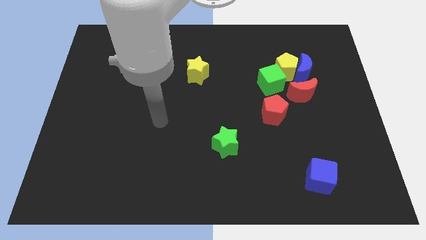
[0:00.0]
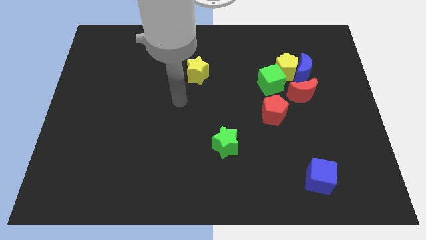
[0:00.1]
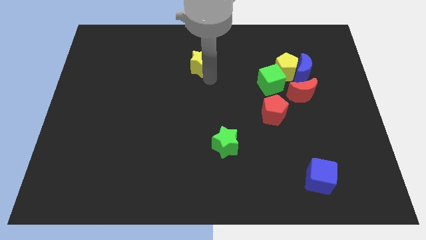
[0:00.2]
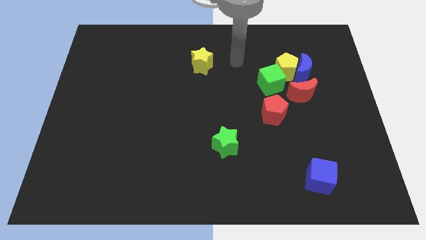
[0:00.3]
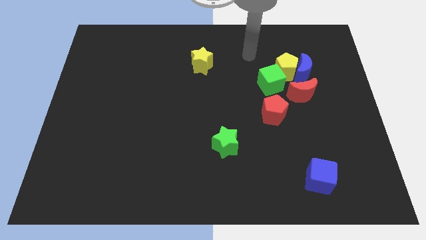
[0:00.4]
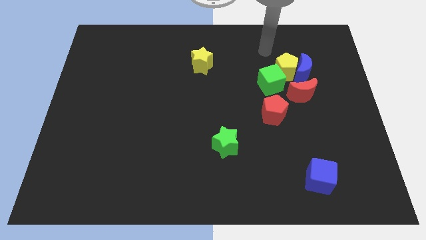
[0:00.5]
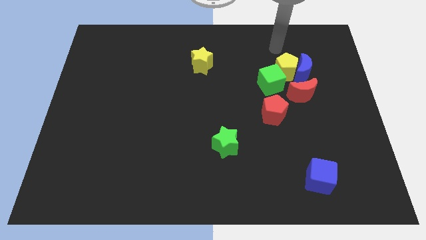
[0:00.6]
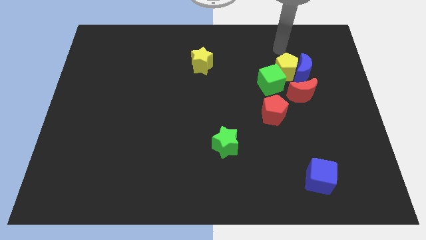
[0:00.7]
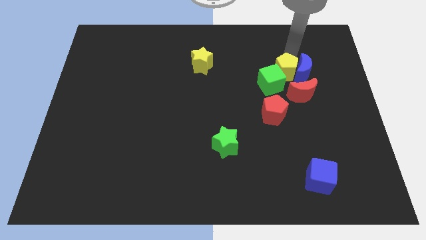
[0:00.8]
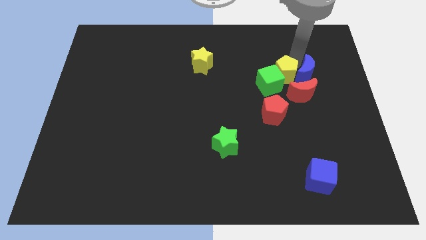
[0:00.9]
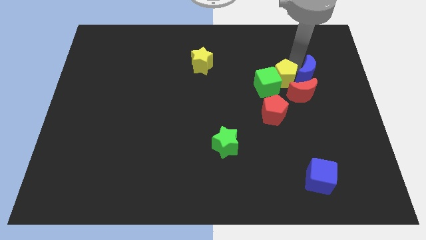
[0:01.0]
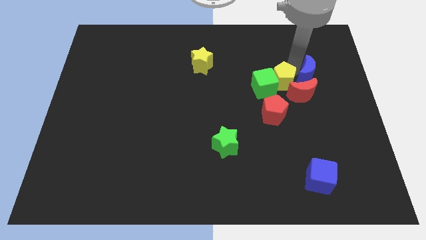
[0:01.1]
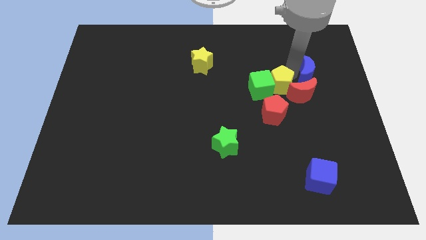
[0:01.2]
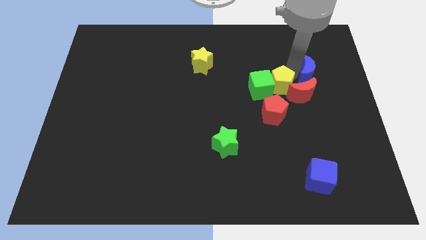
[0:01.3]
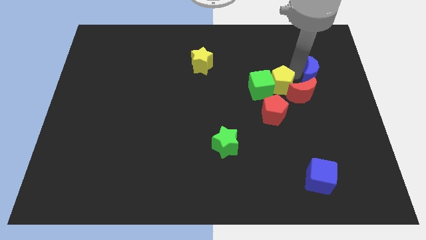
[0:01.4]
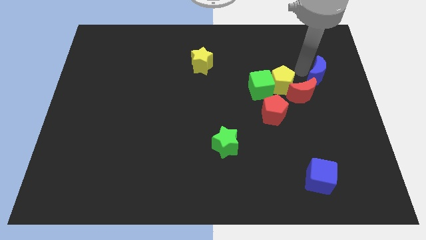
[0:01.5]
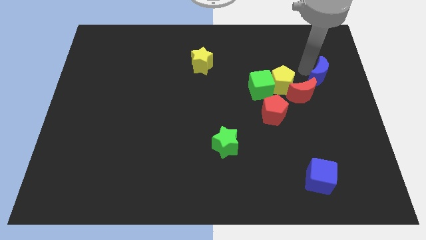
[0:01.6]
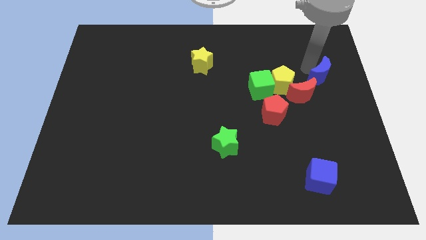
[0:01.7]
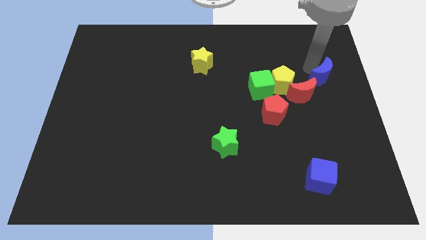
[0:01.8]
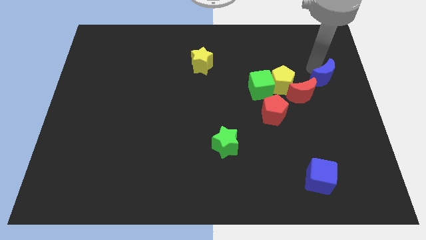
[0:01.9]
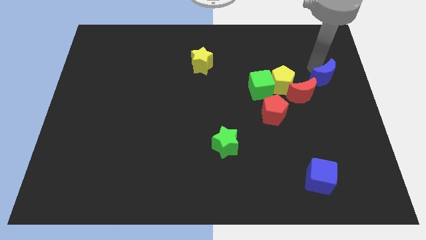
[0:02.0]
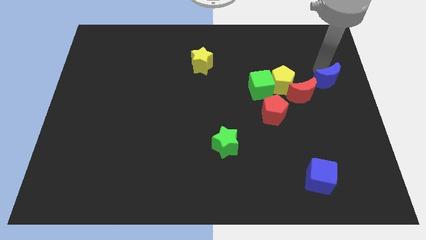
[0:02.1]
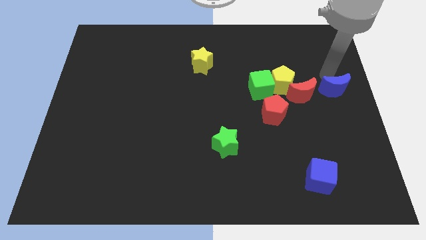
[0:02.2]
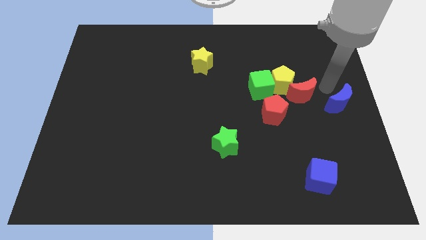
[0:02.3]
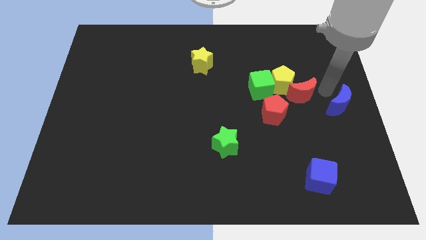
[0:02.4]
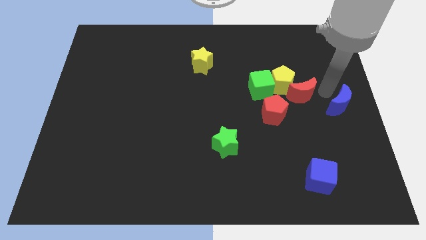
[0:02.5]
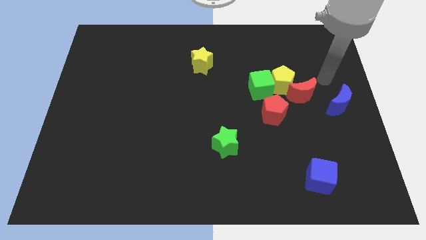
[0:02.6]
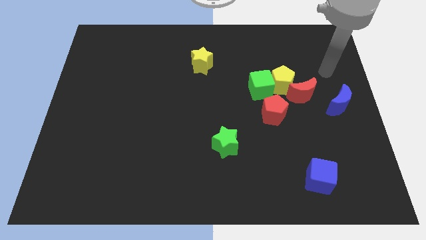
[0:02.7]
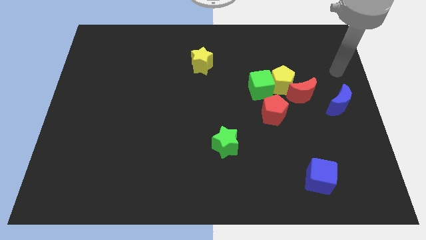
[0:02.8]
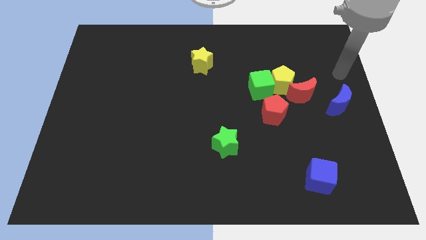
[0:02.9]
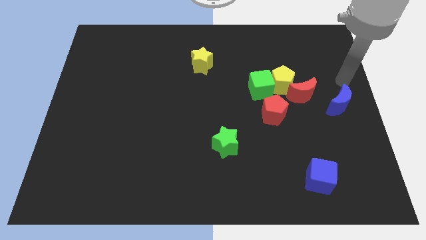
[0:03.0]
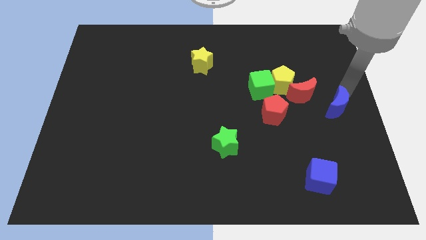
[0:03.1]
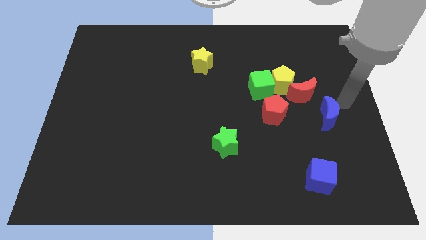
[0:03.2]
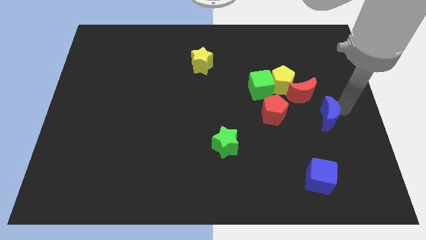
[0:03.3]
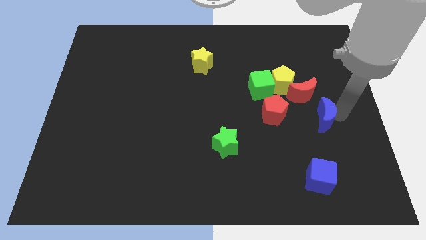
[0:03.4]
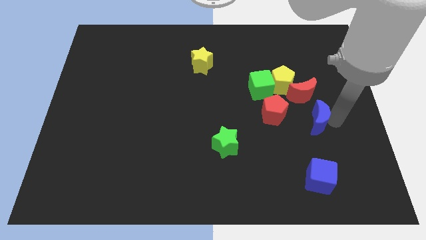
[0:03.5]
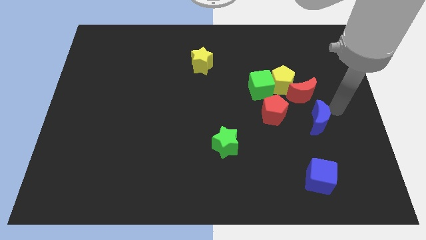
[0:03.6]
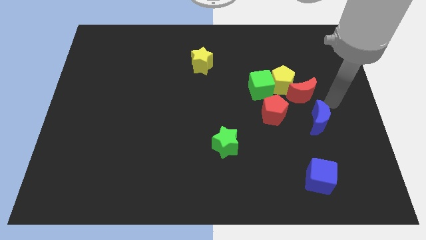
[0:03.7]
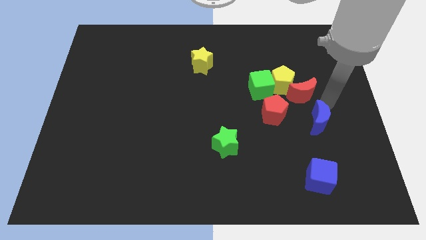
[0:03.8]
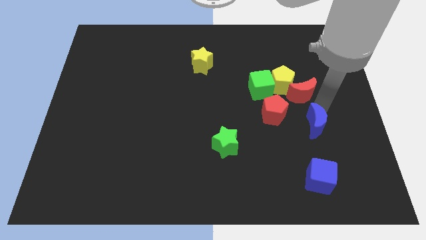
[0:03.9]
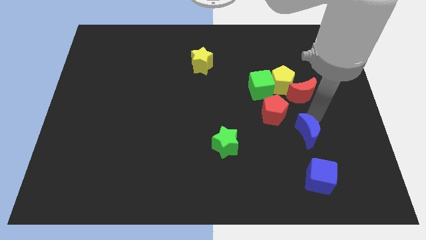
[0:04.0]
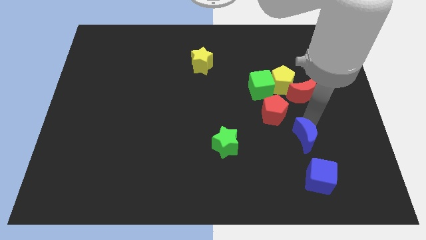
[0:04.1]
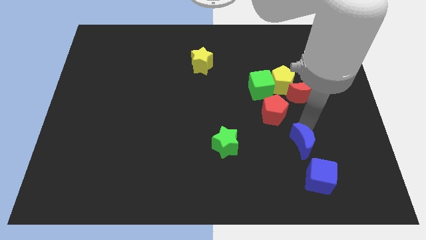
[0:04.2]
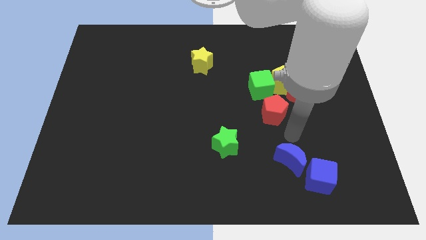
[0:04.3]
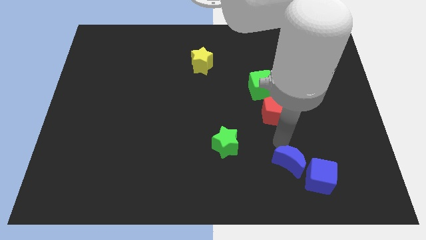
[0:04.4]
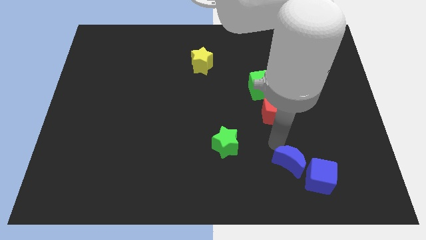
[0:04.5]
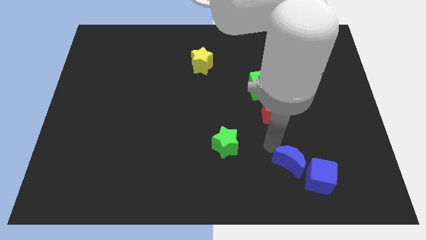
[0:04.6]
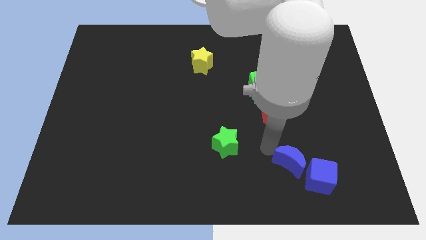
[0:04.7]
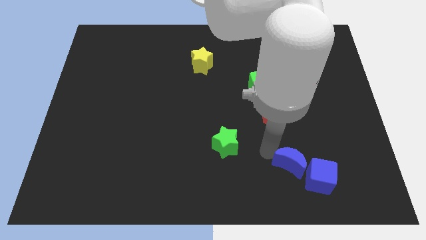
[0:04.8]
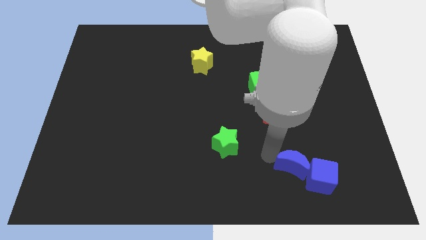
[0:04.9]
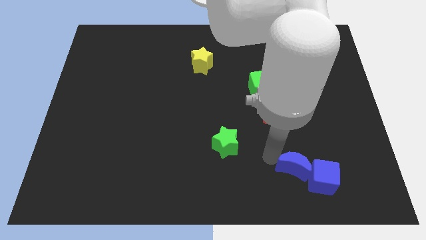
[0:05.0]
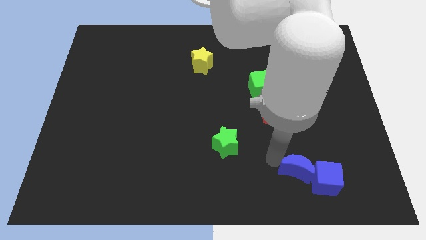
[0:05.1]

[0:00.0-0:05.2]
move the blue moon to the blue cube

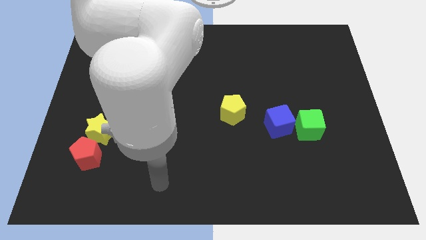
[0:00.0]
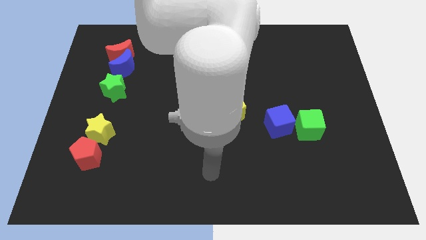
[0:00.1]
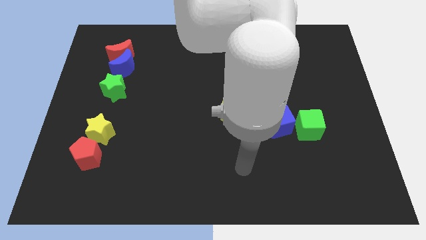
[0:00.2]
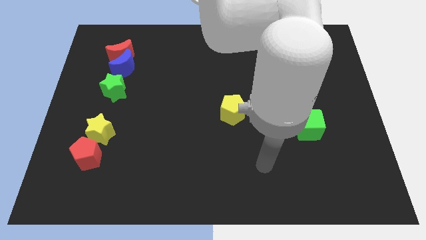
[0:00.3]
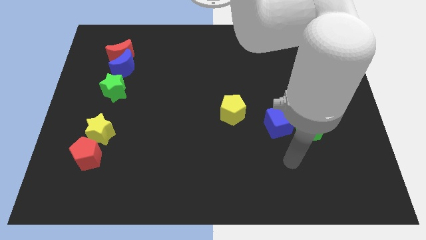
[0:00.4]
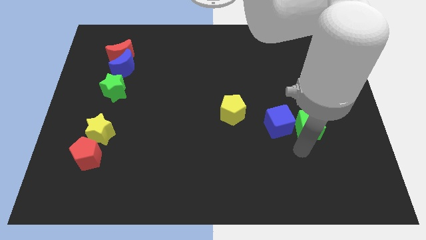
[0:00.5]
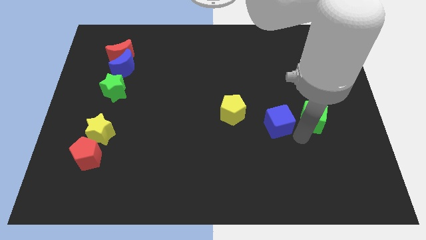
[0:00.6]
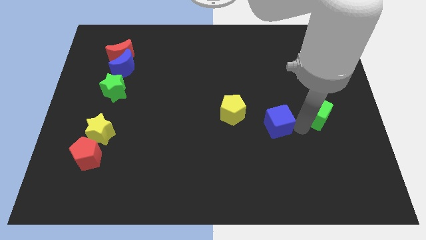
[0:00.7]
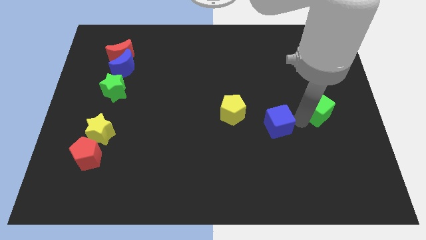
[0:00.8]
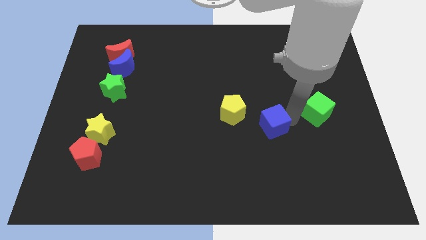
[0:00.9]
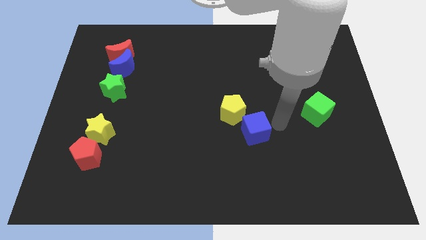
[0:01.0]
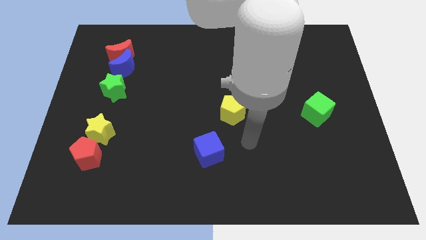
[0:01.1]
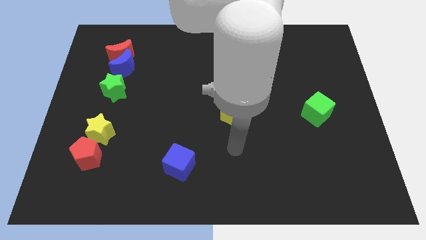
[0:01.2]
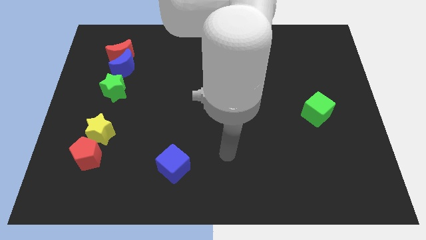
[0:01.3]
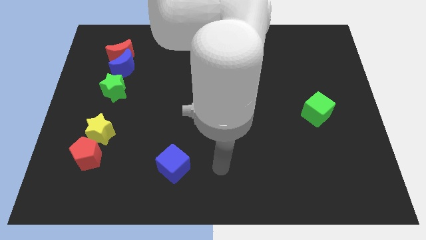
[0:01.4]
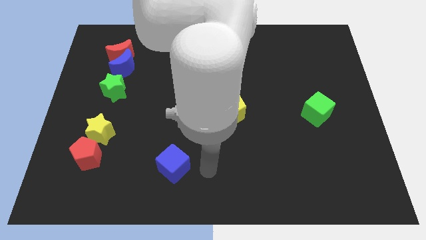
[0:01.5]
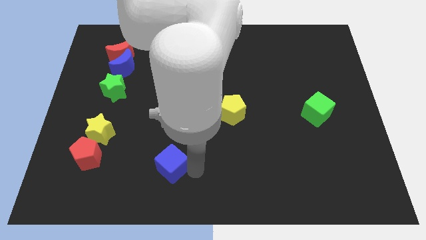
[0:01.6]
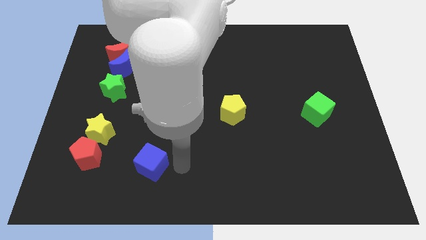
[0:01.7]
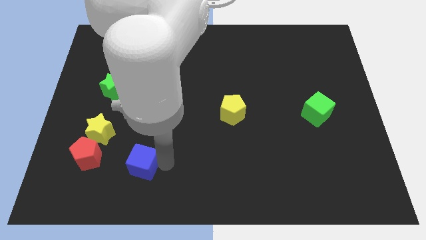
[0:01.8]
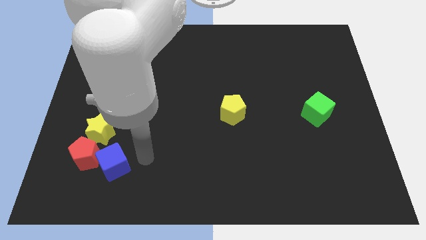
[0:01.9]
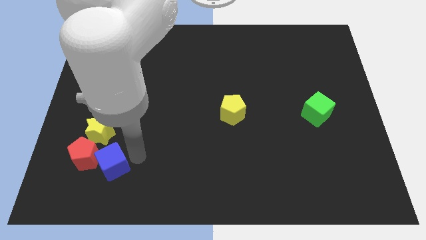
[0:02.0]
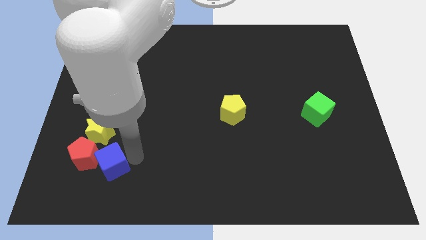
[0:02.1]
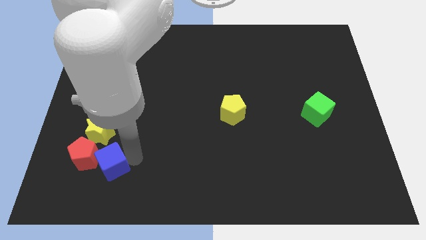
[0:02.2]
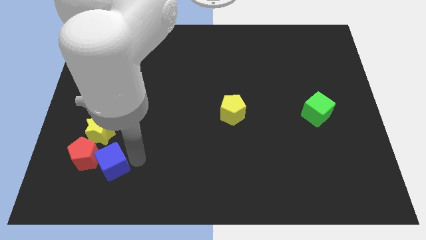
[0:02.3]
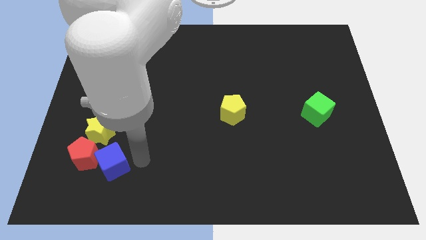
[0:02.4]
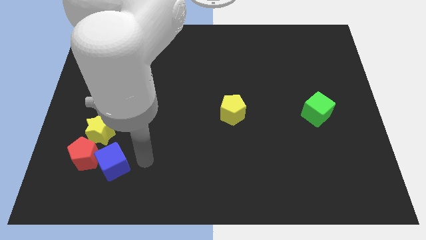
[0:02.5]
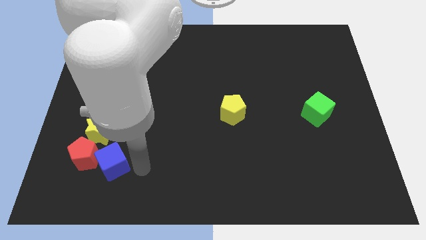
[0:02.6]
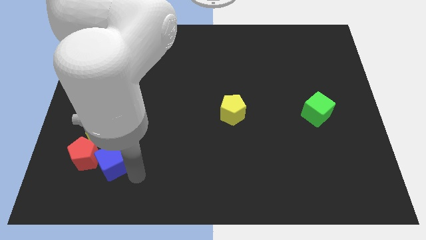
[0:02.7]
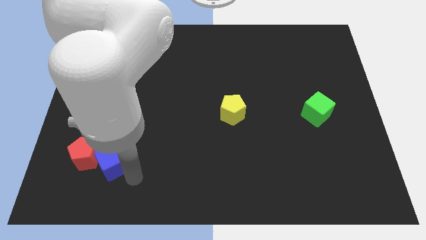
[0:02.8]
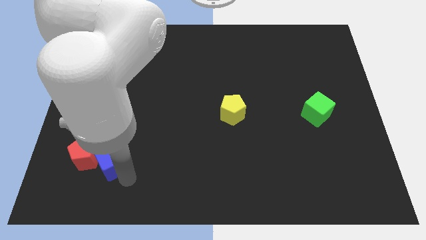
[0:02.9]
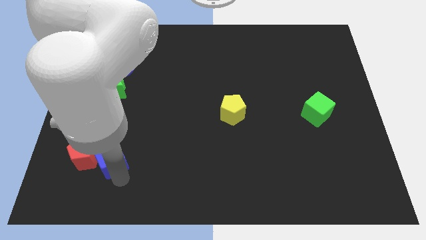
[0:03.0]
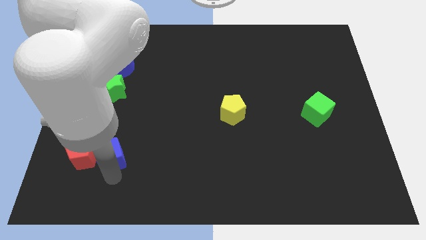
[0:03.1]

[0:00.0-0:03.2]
push the blue cube close to the red pentagon

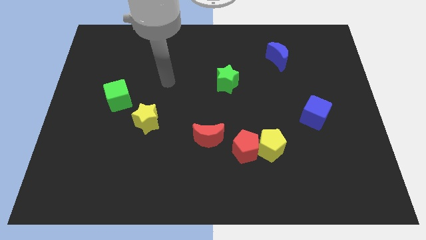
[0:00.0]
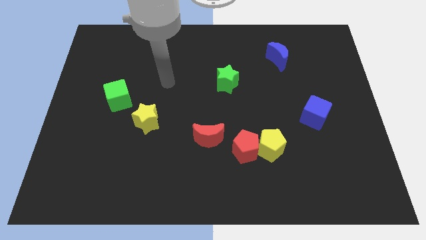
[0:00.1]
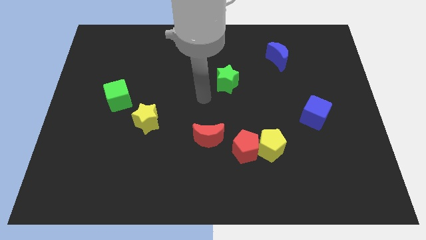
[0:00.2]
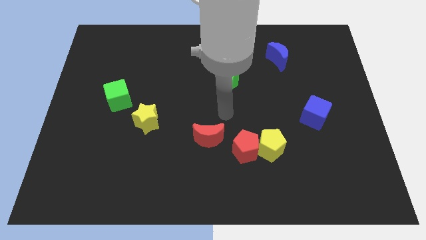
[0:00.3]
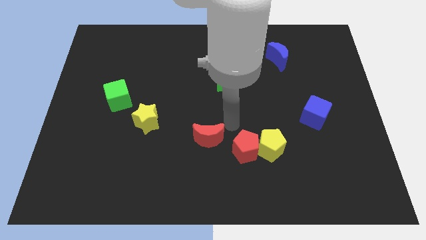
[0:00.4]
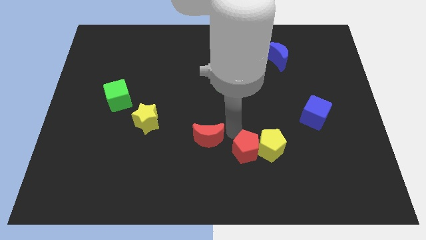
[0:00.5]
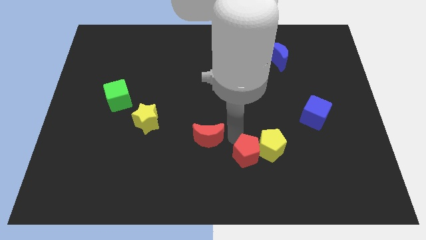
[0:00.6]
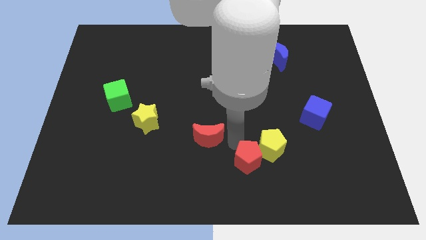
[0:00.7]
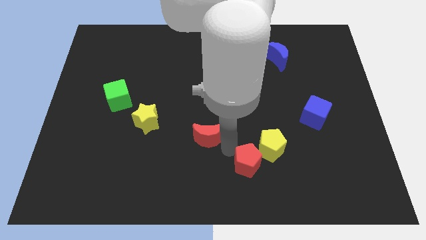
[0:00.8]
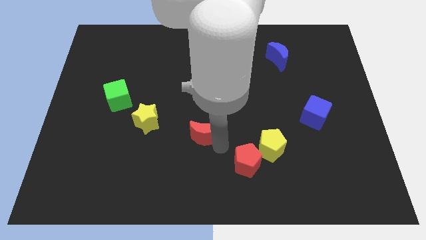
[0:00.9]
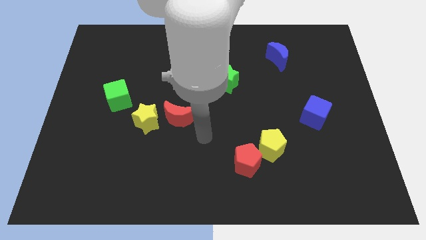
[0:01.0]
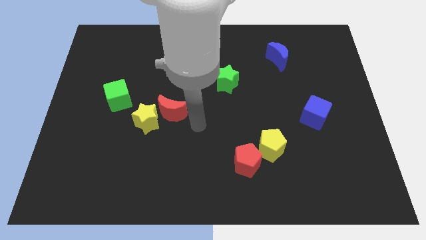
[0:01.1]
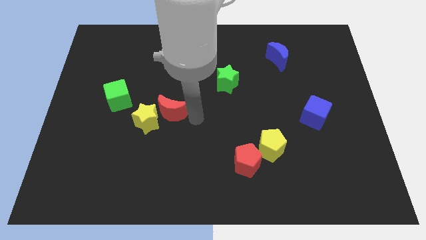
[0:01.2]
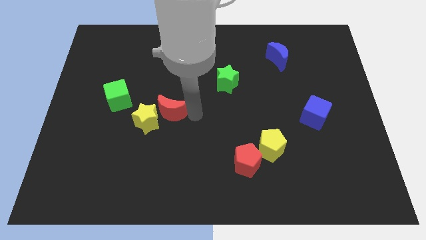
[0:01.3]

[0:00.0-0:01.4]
move the red moon close to the yellow star
